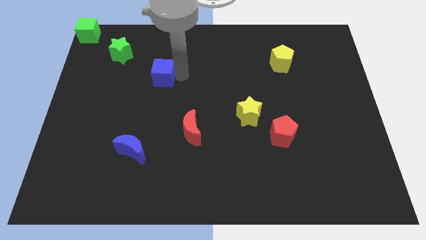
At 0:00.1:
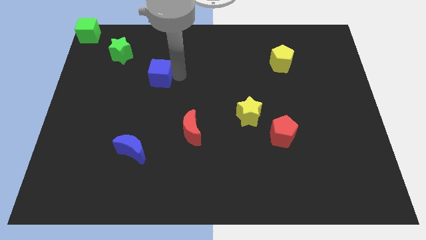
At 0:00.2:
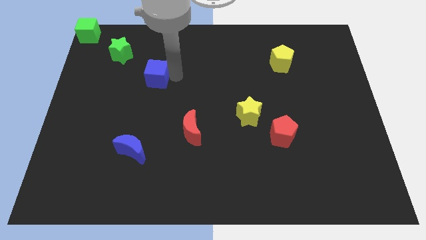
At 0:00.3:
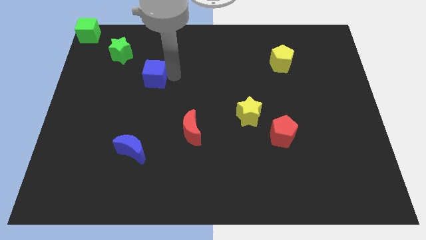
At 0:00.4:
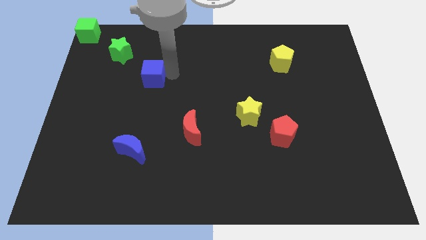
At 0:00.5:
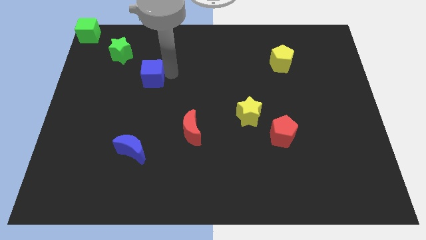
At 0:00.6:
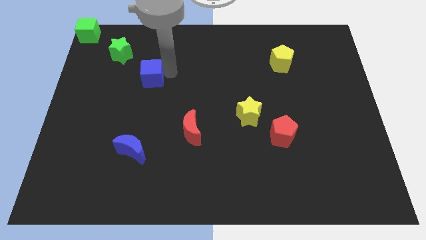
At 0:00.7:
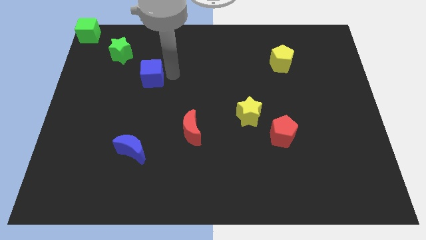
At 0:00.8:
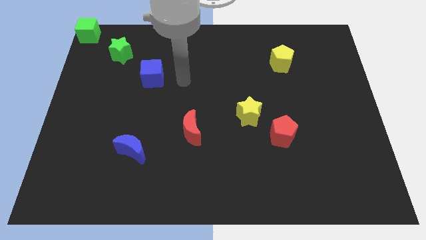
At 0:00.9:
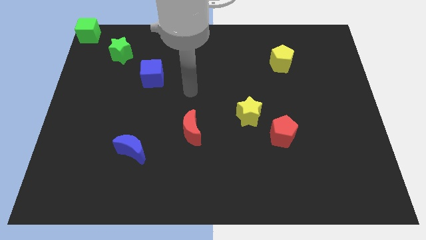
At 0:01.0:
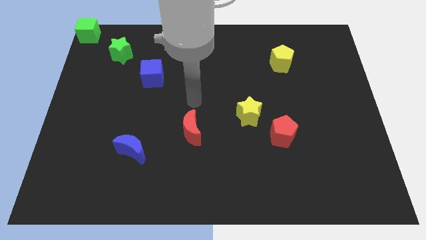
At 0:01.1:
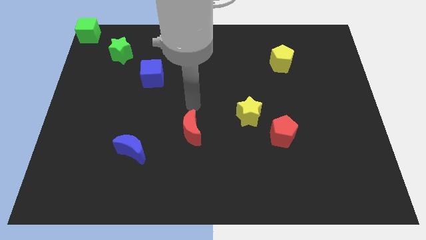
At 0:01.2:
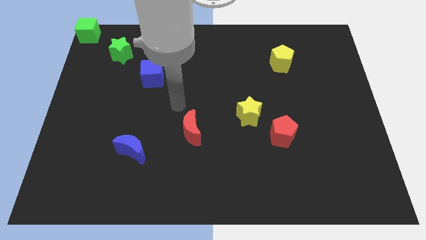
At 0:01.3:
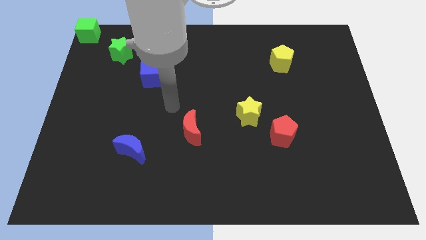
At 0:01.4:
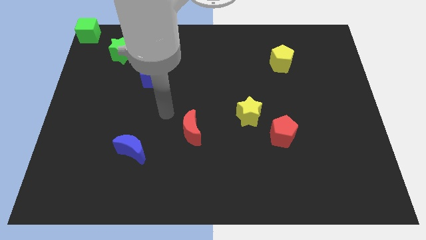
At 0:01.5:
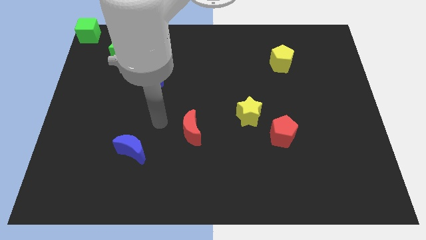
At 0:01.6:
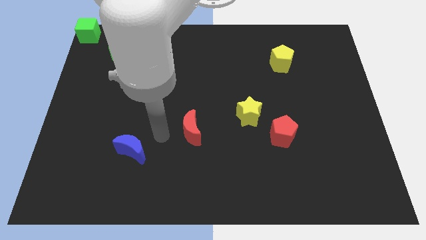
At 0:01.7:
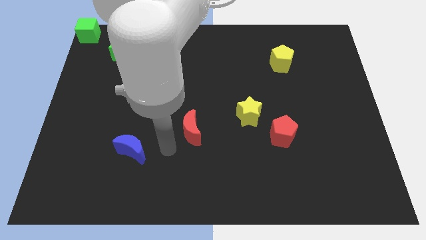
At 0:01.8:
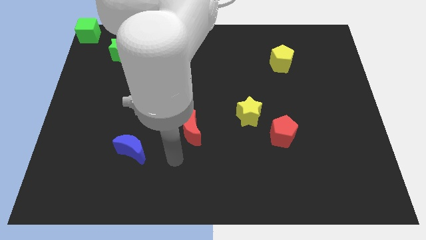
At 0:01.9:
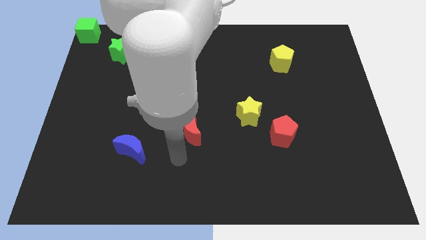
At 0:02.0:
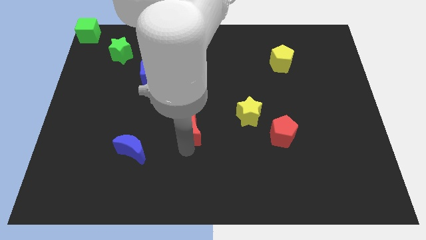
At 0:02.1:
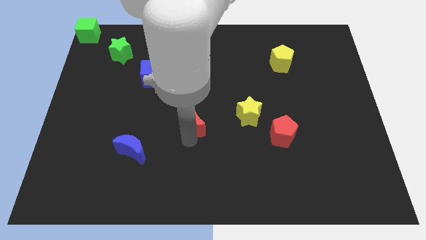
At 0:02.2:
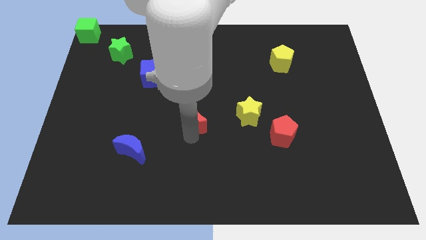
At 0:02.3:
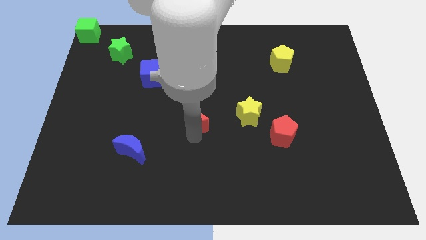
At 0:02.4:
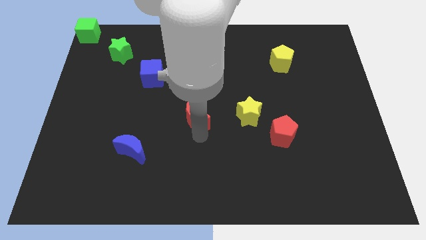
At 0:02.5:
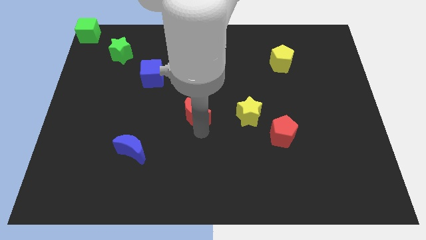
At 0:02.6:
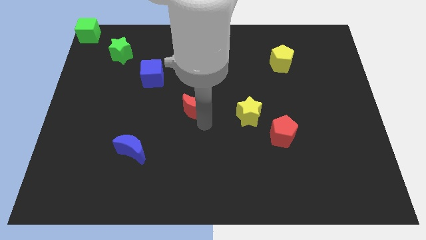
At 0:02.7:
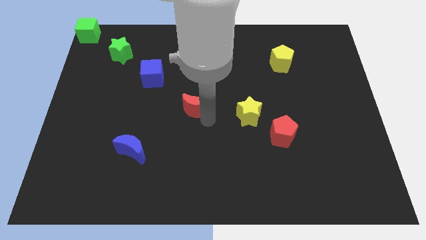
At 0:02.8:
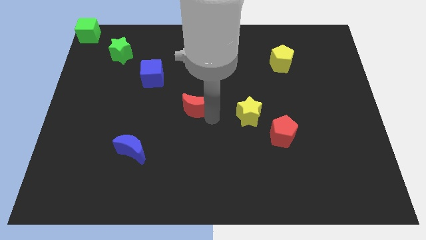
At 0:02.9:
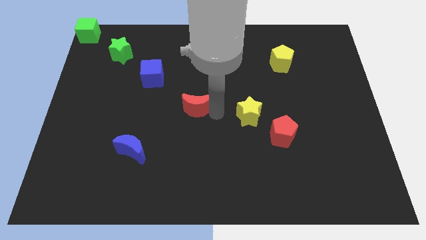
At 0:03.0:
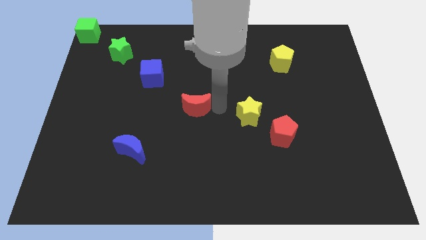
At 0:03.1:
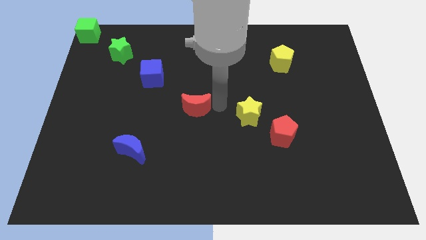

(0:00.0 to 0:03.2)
slightly touch blue cube move red moon towards red crescent

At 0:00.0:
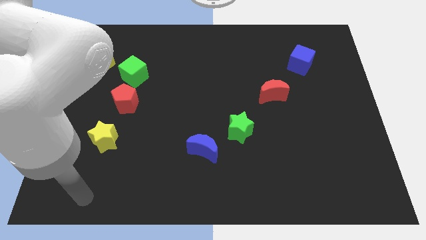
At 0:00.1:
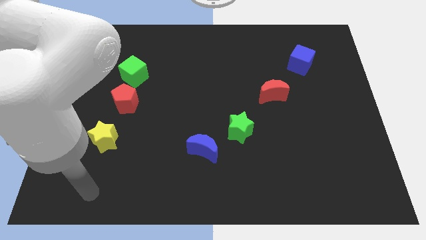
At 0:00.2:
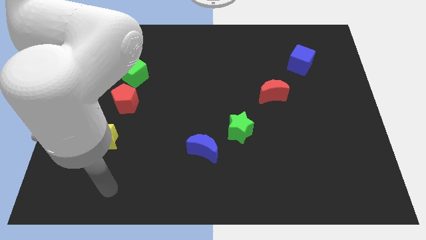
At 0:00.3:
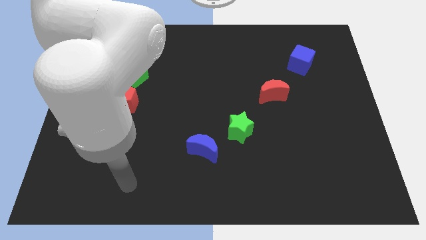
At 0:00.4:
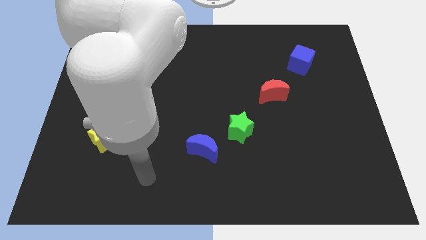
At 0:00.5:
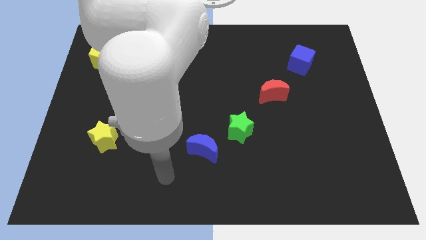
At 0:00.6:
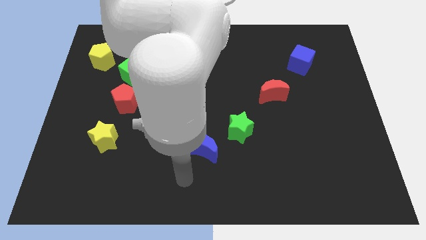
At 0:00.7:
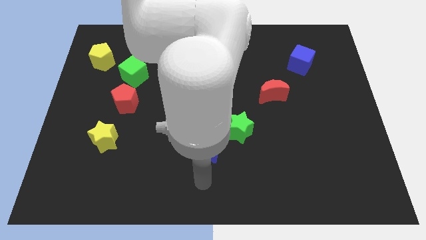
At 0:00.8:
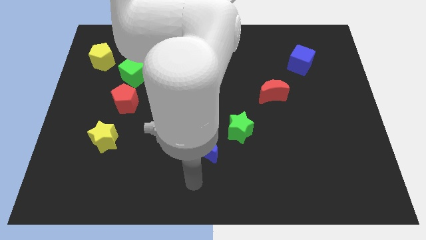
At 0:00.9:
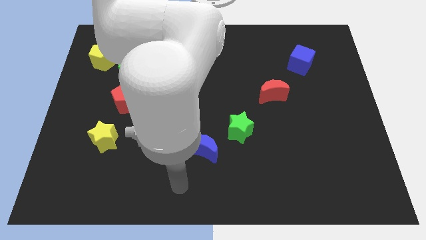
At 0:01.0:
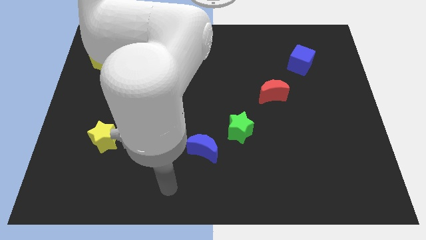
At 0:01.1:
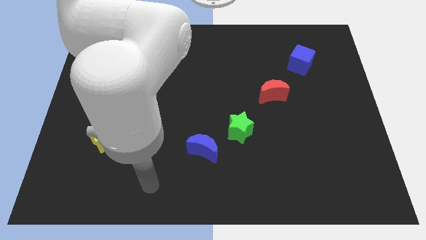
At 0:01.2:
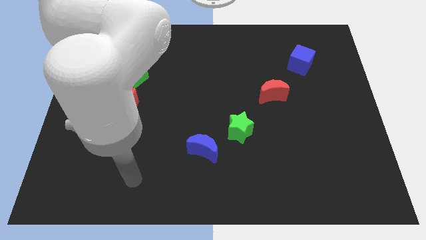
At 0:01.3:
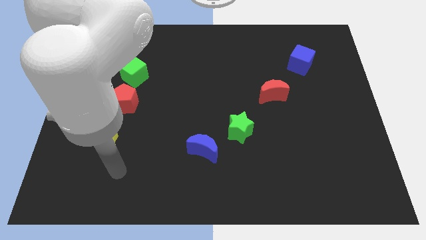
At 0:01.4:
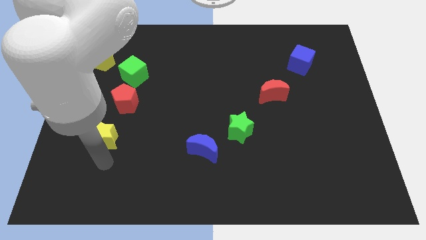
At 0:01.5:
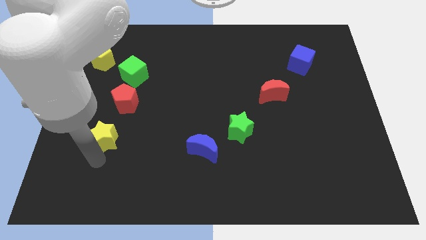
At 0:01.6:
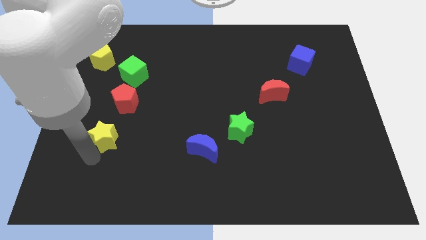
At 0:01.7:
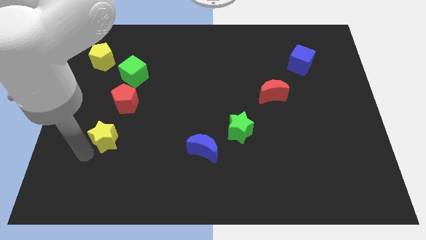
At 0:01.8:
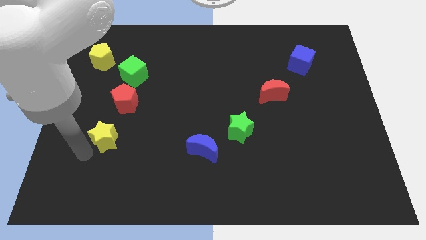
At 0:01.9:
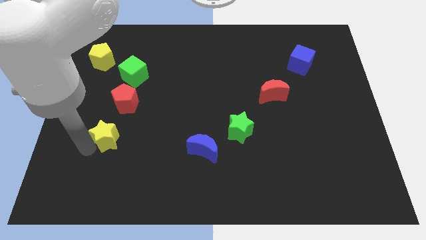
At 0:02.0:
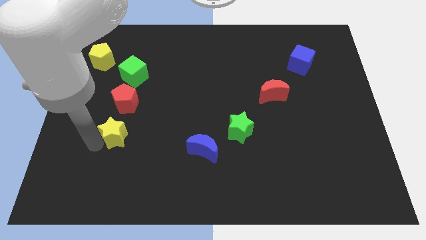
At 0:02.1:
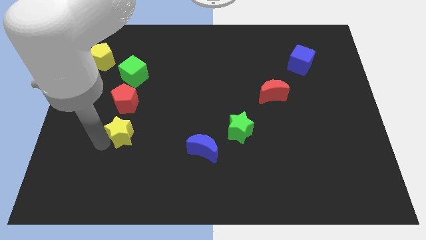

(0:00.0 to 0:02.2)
place your arm to the left of yellow star

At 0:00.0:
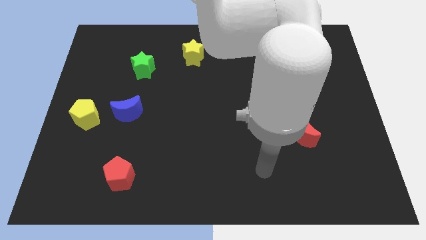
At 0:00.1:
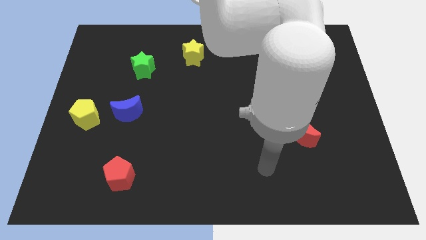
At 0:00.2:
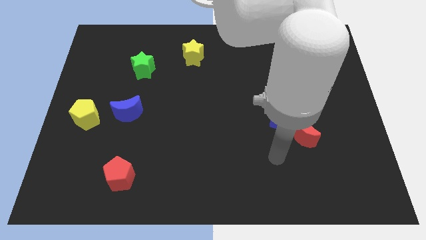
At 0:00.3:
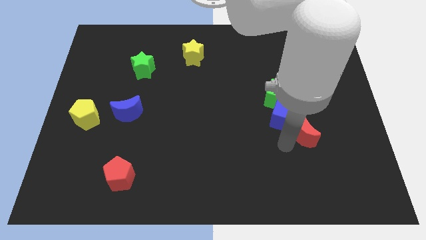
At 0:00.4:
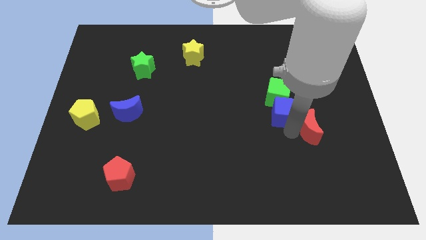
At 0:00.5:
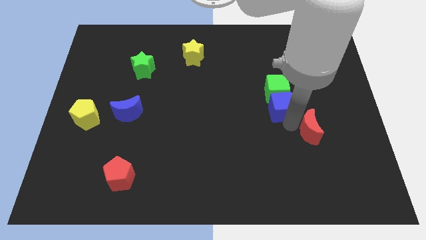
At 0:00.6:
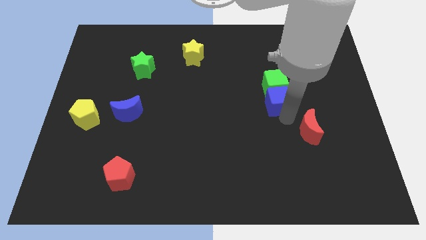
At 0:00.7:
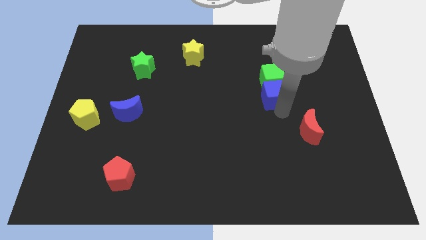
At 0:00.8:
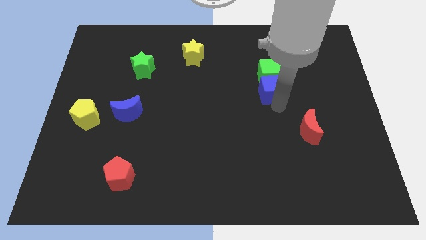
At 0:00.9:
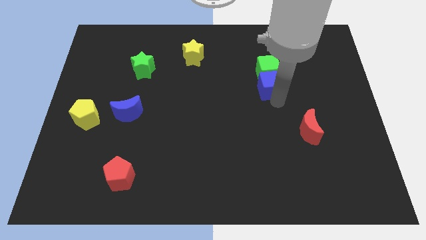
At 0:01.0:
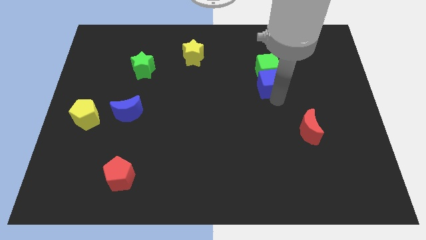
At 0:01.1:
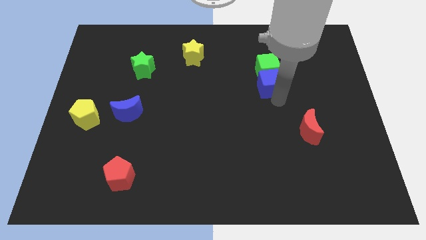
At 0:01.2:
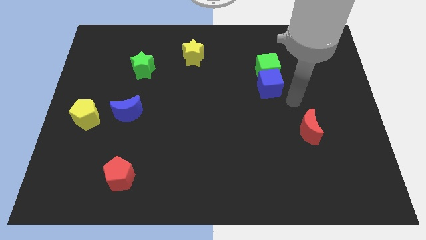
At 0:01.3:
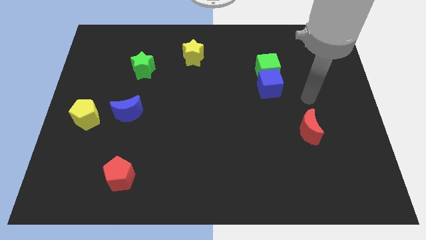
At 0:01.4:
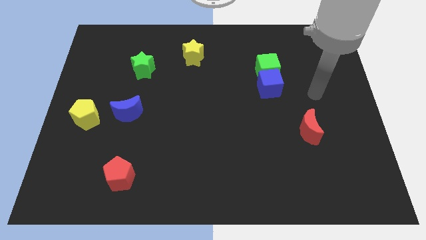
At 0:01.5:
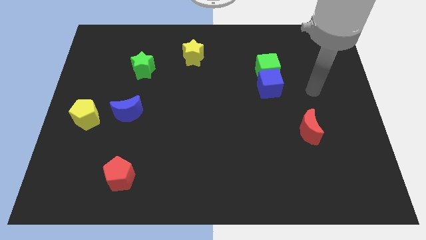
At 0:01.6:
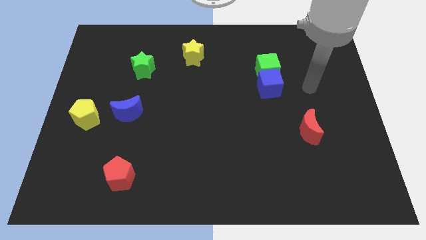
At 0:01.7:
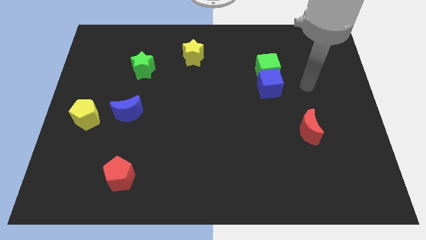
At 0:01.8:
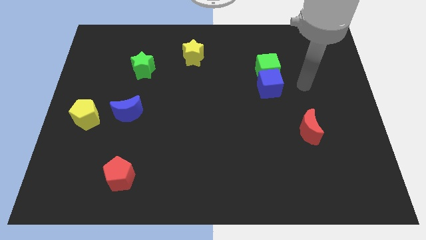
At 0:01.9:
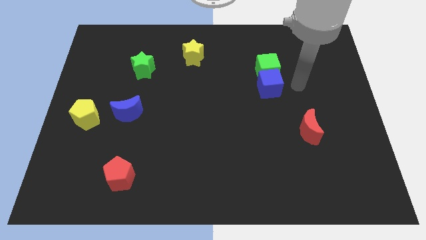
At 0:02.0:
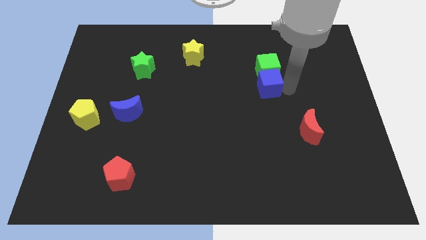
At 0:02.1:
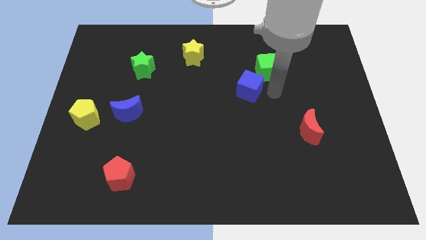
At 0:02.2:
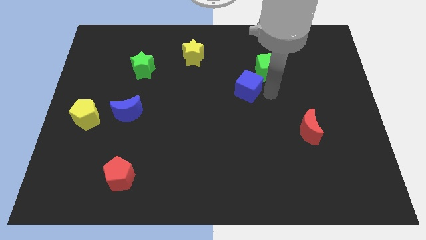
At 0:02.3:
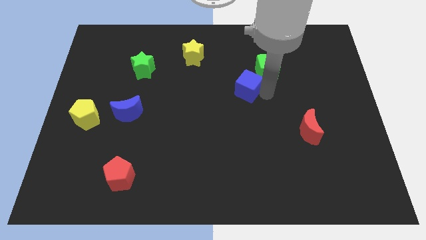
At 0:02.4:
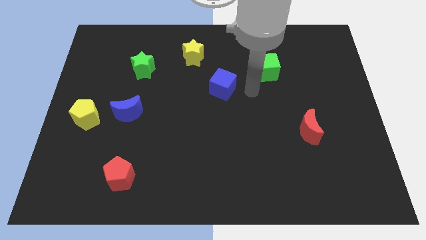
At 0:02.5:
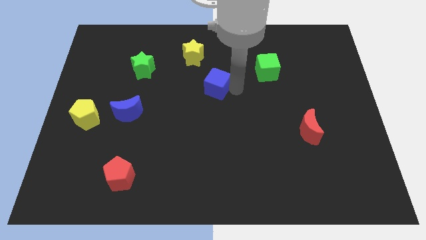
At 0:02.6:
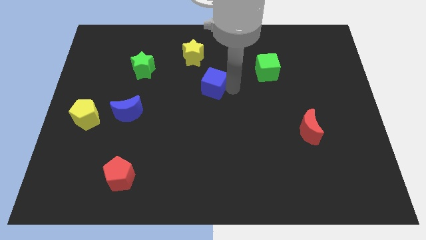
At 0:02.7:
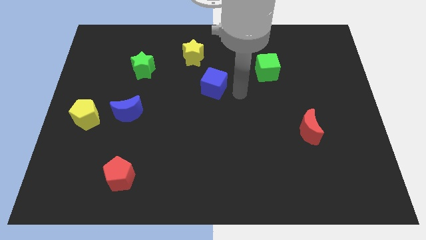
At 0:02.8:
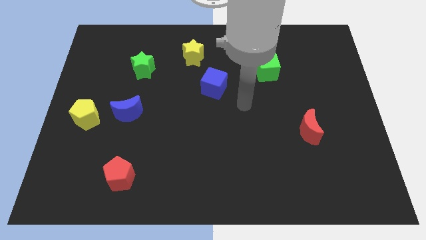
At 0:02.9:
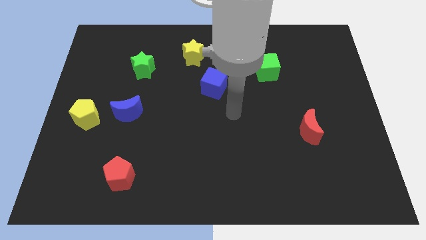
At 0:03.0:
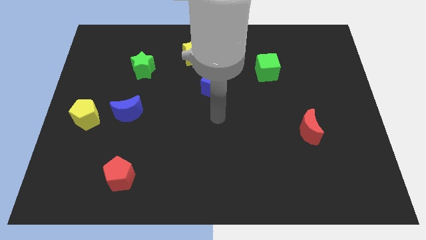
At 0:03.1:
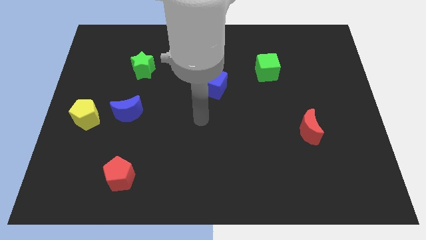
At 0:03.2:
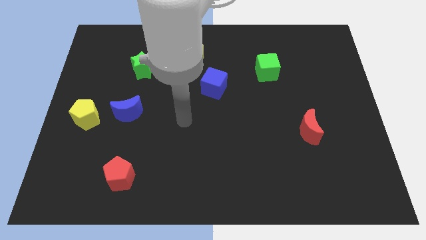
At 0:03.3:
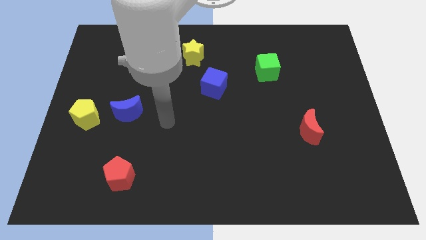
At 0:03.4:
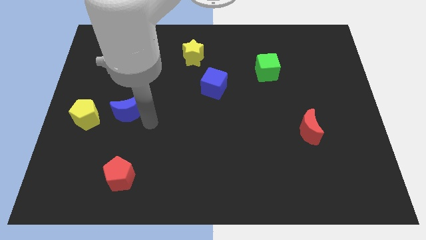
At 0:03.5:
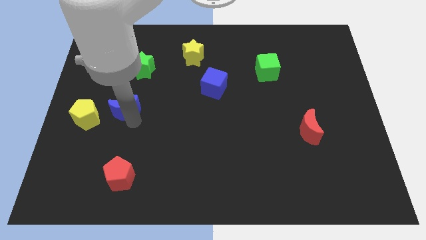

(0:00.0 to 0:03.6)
separate blue cube from green cube
